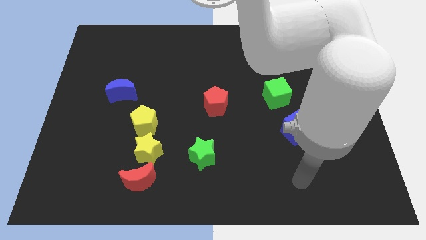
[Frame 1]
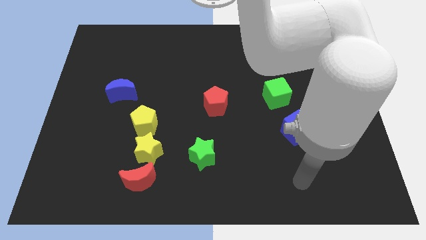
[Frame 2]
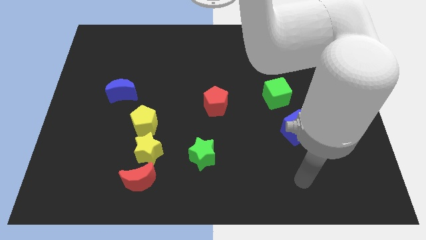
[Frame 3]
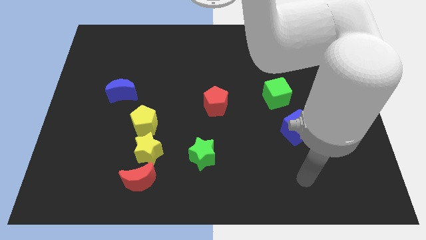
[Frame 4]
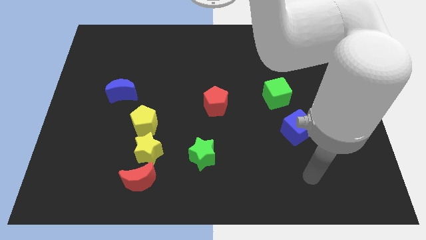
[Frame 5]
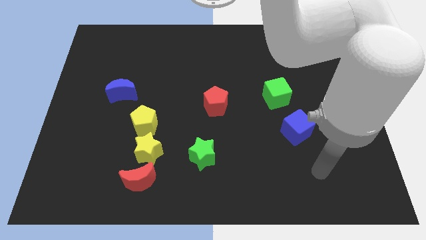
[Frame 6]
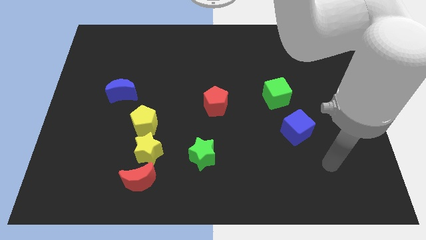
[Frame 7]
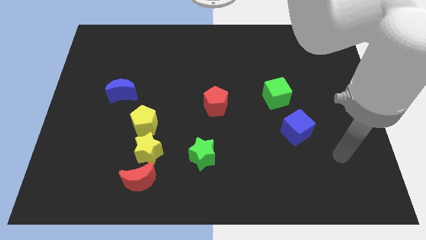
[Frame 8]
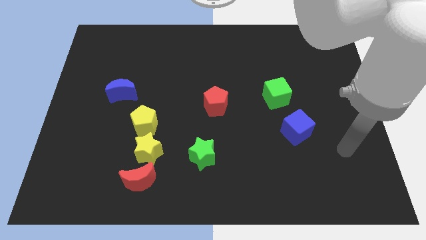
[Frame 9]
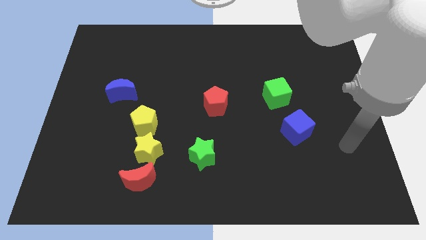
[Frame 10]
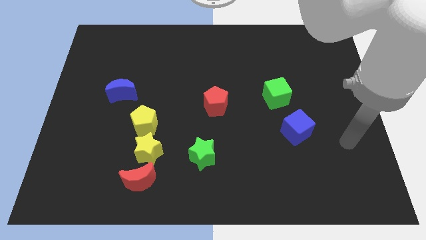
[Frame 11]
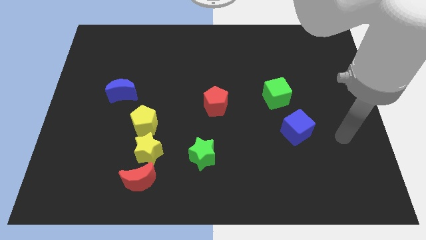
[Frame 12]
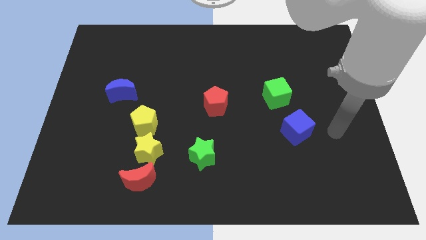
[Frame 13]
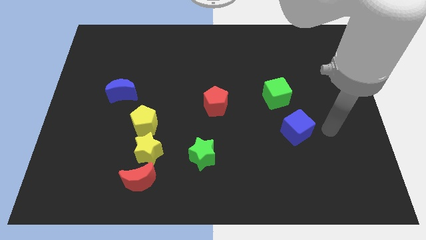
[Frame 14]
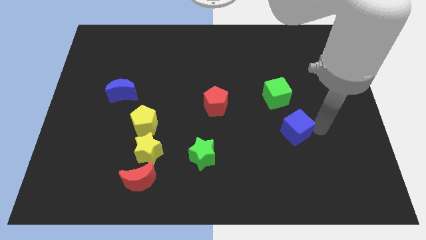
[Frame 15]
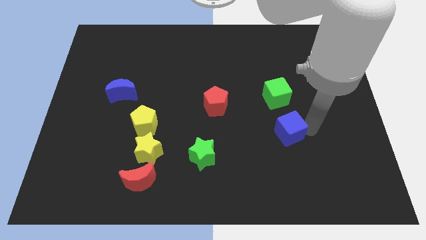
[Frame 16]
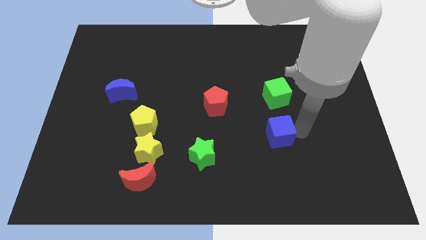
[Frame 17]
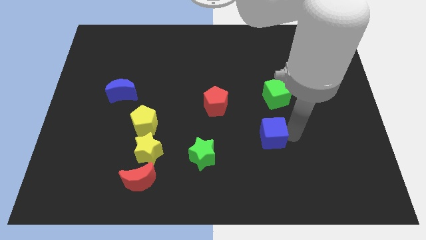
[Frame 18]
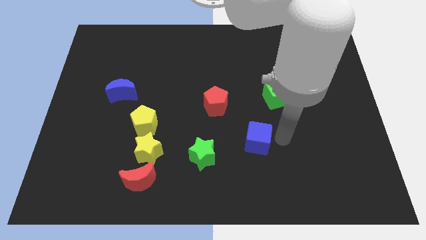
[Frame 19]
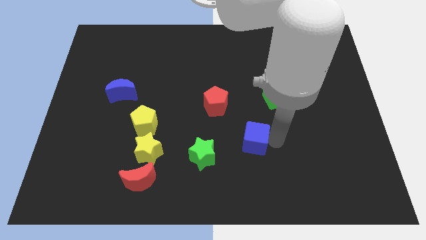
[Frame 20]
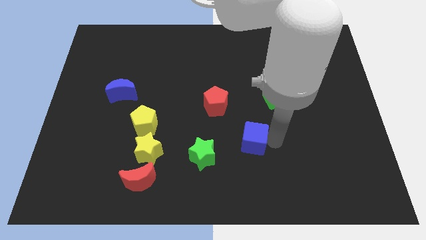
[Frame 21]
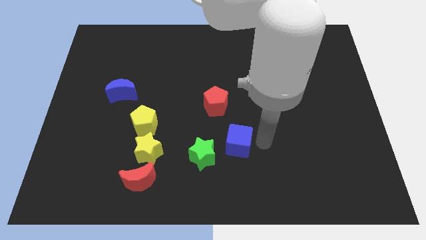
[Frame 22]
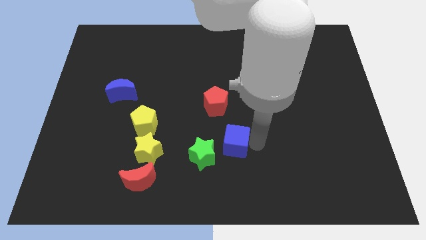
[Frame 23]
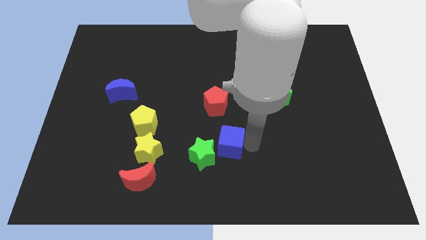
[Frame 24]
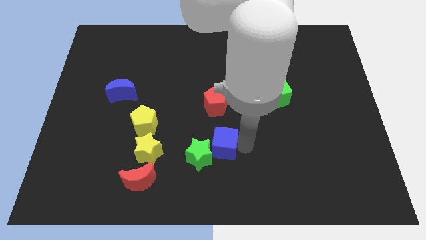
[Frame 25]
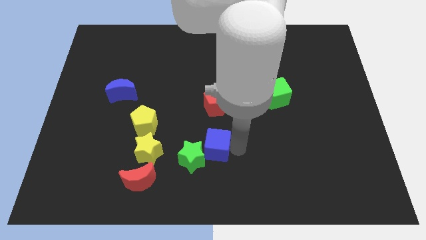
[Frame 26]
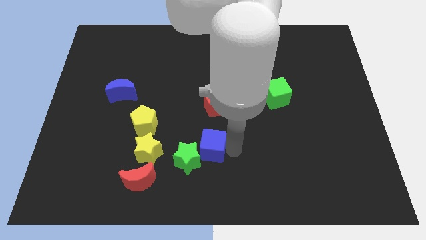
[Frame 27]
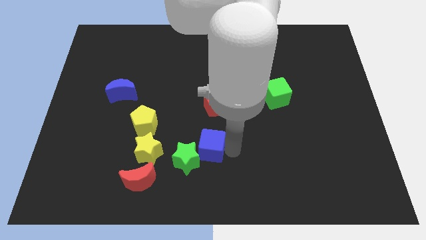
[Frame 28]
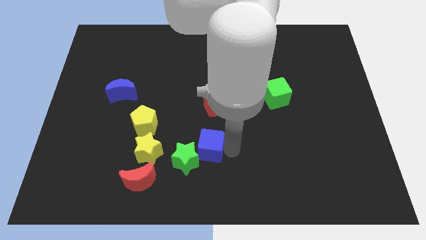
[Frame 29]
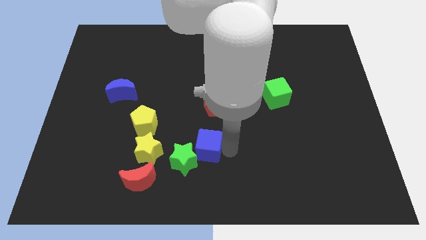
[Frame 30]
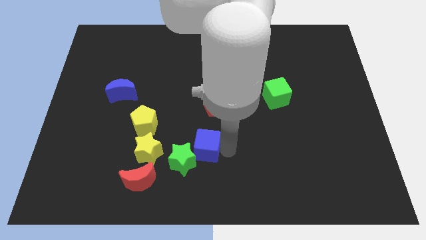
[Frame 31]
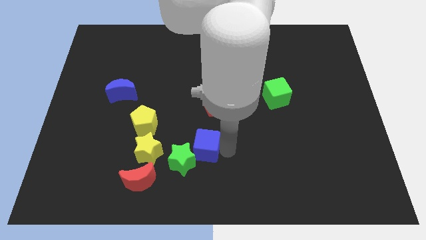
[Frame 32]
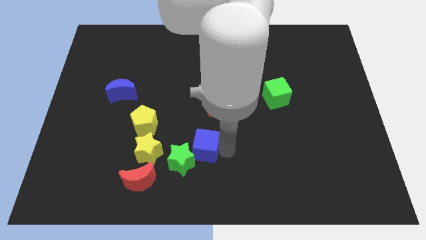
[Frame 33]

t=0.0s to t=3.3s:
push blue cube into green star

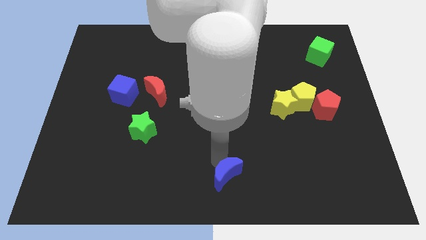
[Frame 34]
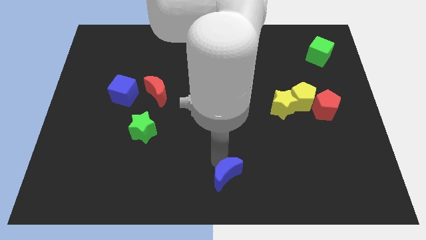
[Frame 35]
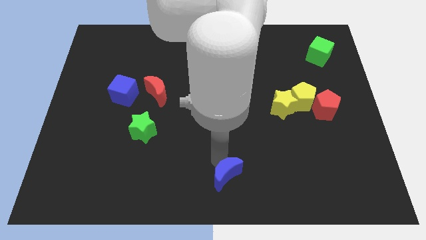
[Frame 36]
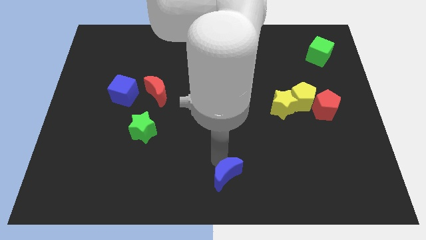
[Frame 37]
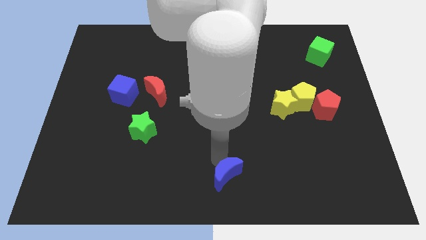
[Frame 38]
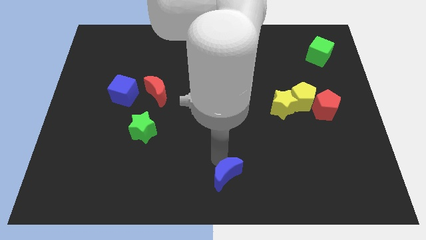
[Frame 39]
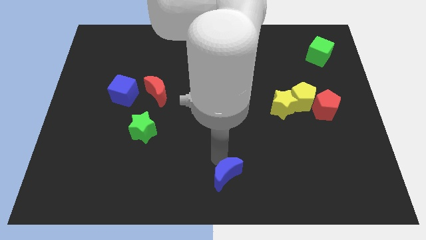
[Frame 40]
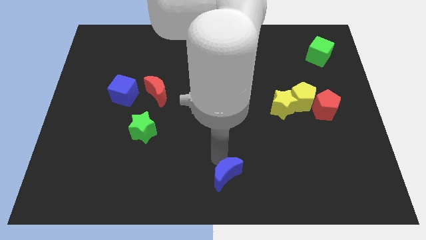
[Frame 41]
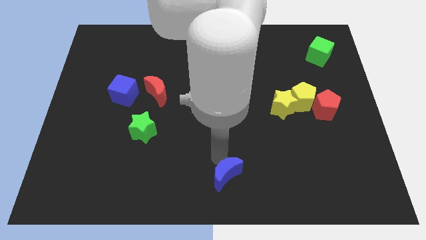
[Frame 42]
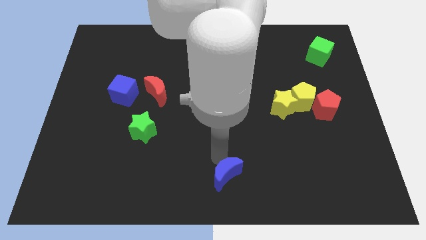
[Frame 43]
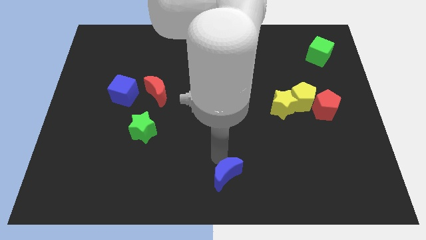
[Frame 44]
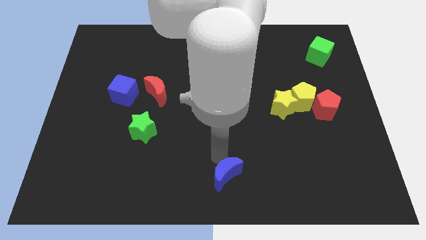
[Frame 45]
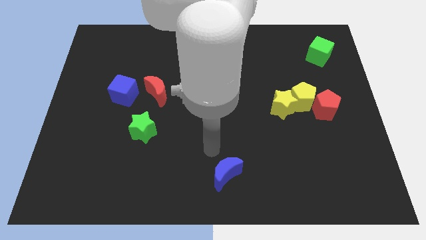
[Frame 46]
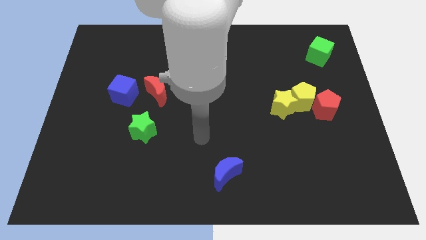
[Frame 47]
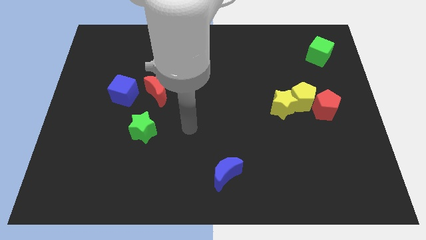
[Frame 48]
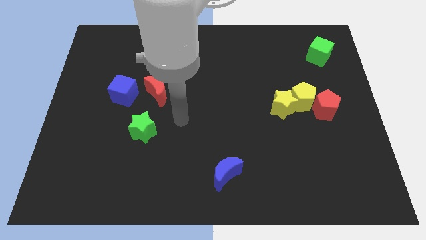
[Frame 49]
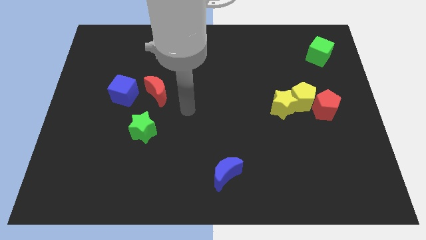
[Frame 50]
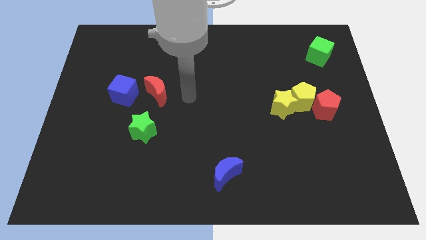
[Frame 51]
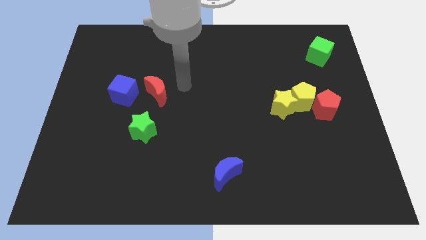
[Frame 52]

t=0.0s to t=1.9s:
move your arm away from the blue moon

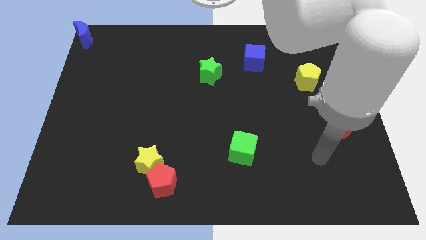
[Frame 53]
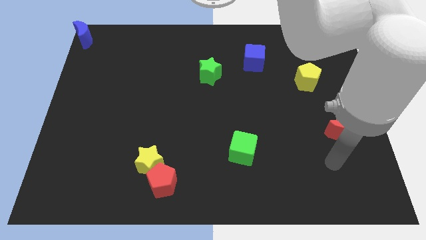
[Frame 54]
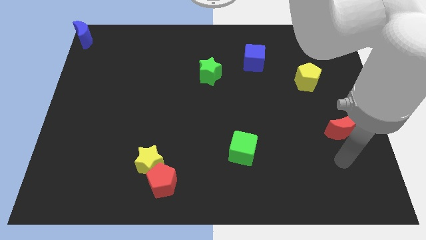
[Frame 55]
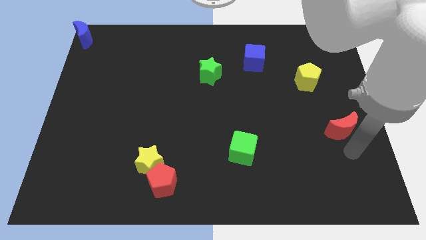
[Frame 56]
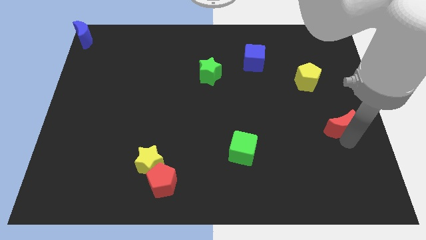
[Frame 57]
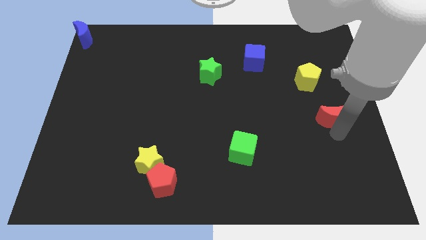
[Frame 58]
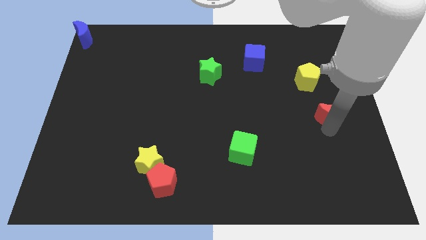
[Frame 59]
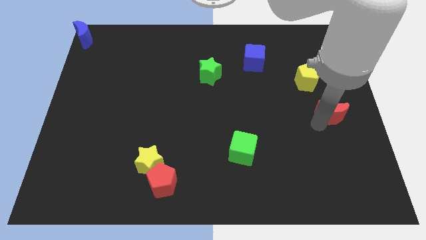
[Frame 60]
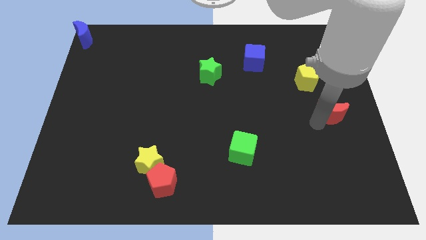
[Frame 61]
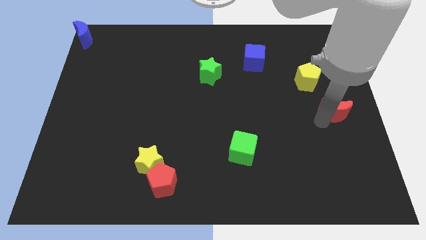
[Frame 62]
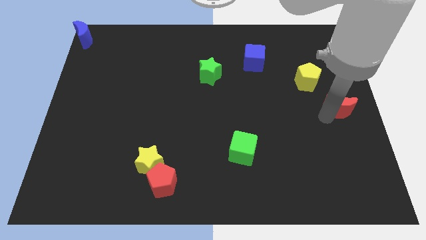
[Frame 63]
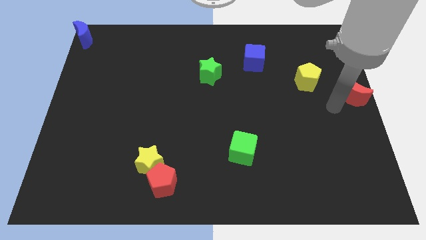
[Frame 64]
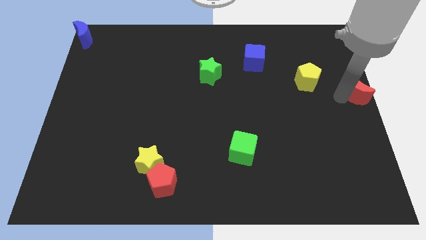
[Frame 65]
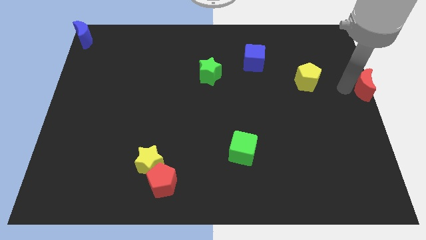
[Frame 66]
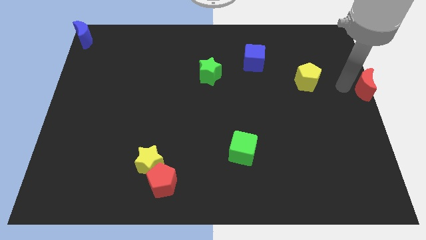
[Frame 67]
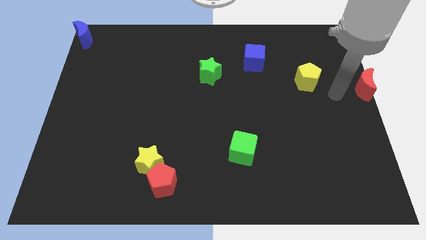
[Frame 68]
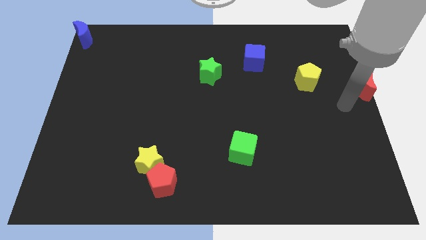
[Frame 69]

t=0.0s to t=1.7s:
push the red moon towards the right side of the board

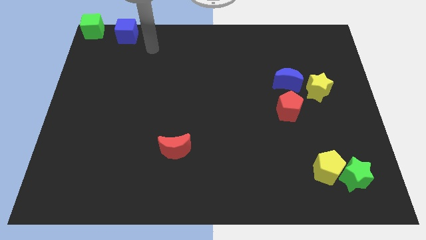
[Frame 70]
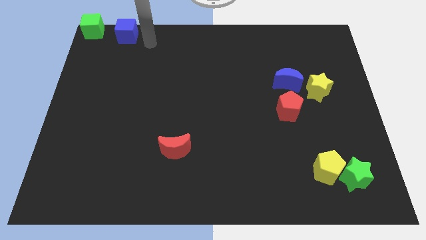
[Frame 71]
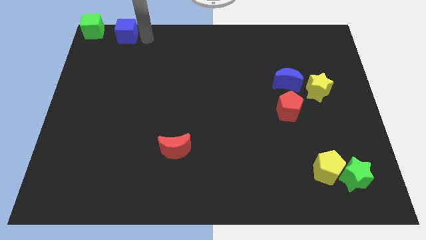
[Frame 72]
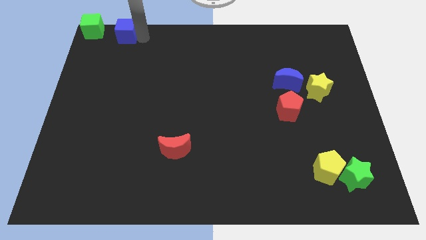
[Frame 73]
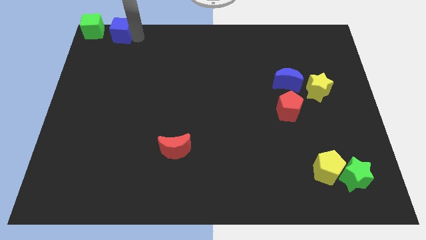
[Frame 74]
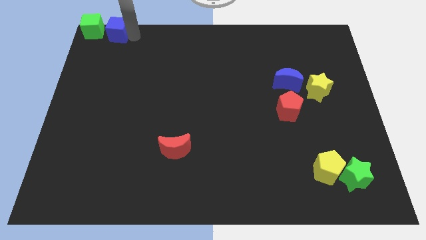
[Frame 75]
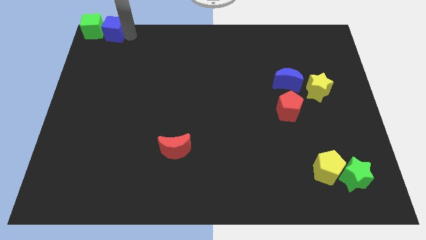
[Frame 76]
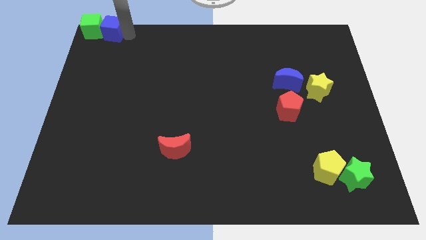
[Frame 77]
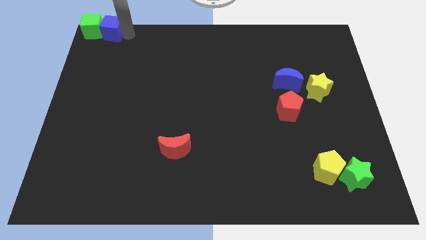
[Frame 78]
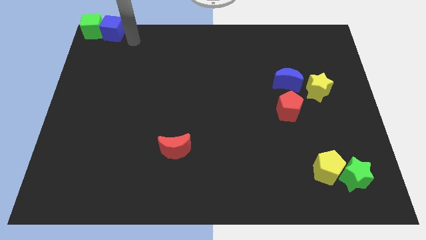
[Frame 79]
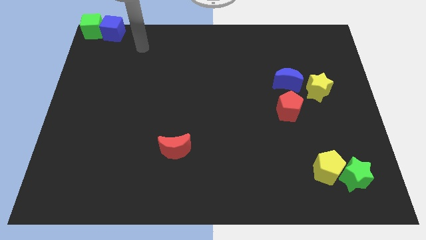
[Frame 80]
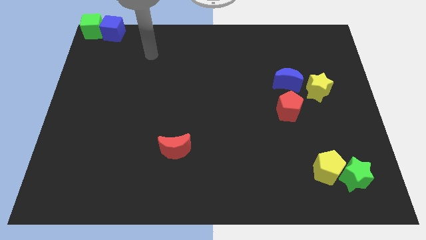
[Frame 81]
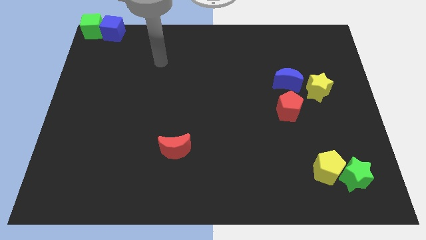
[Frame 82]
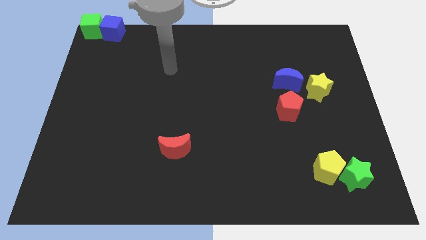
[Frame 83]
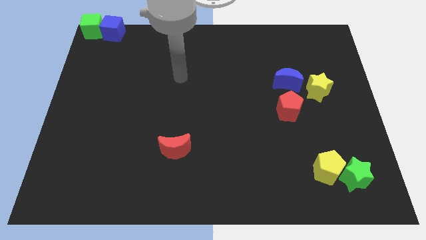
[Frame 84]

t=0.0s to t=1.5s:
place the blue cube close to the green cube

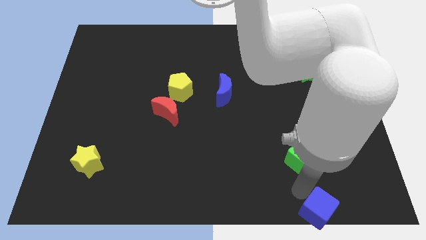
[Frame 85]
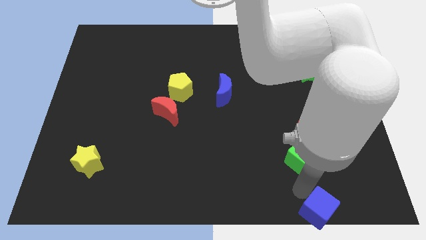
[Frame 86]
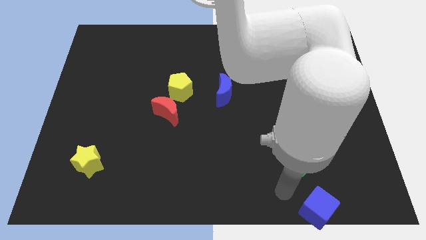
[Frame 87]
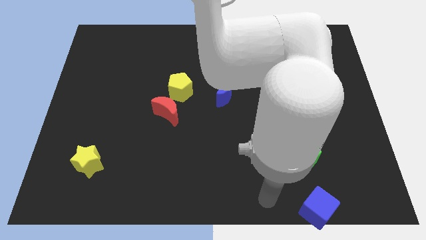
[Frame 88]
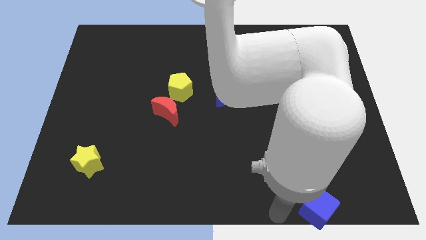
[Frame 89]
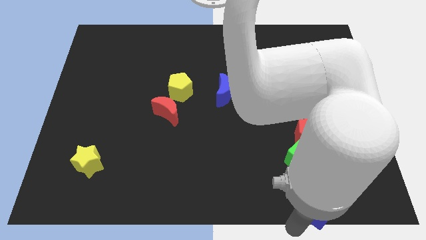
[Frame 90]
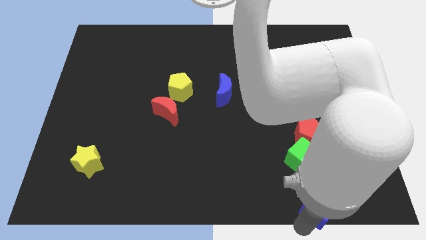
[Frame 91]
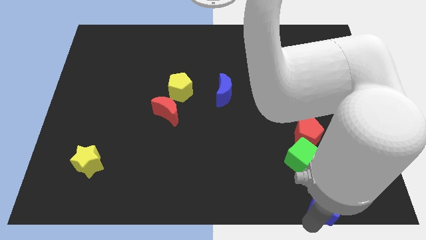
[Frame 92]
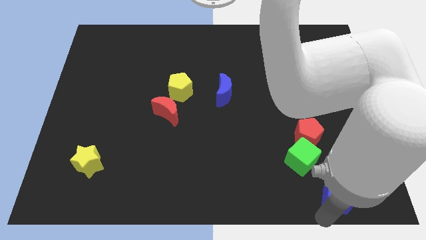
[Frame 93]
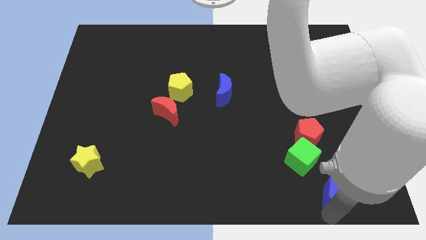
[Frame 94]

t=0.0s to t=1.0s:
push blue cube slightly towards the top
